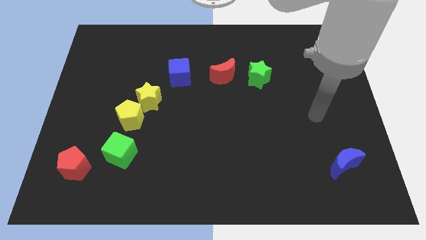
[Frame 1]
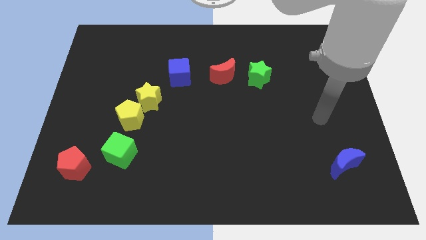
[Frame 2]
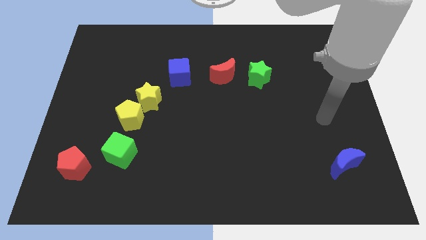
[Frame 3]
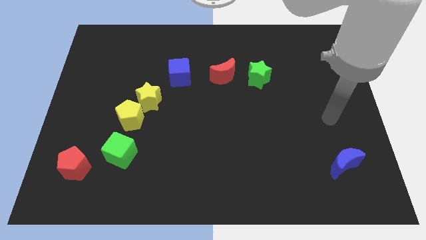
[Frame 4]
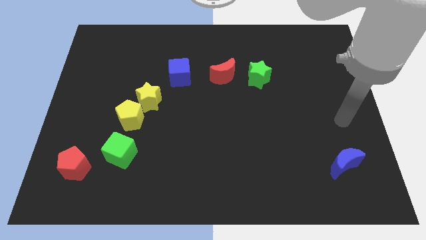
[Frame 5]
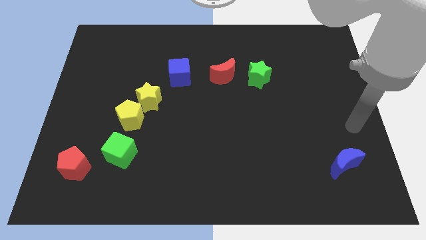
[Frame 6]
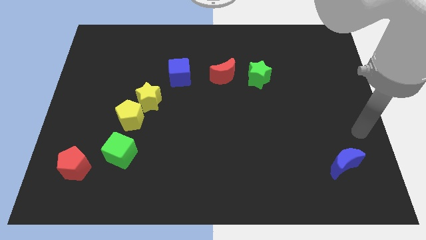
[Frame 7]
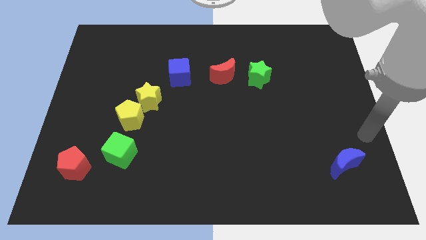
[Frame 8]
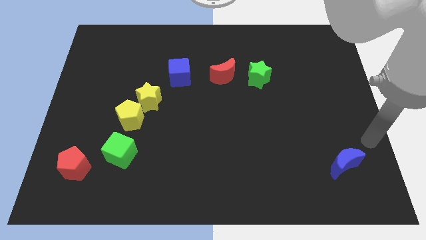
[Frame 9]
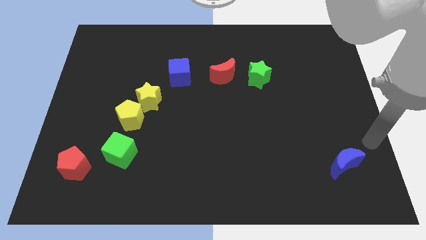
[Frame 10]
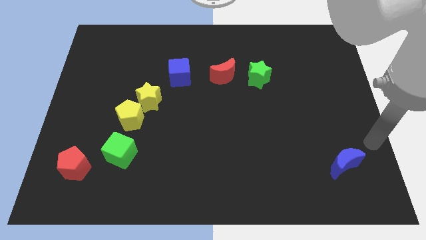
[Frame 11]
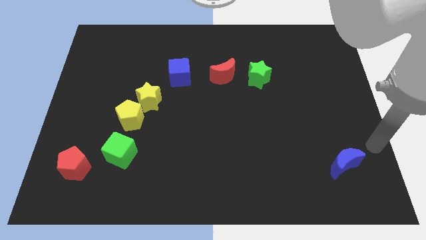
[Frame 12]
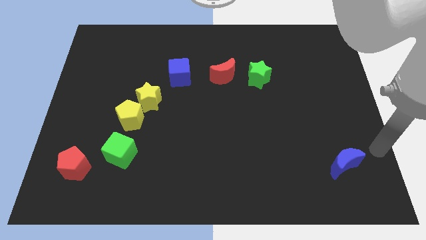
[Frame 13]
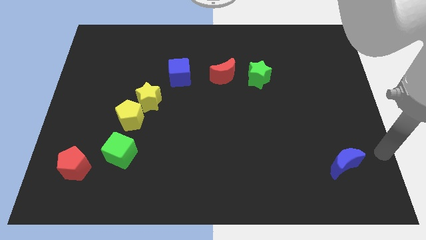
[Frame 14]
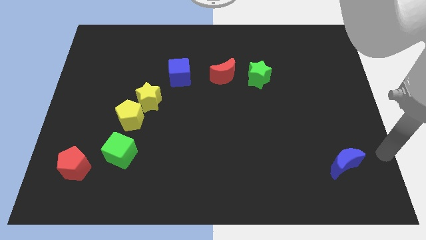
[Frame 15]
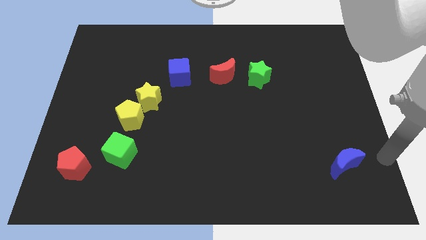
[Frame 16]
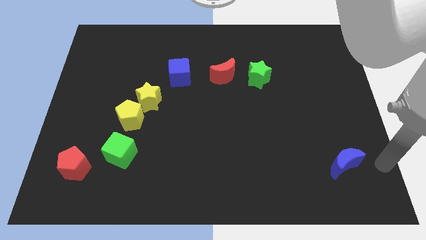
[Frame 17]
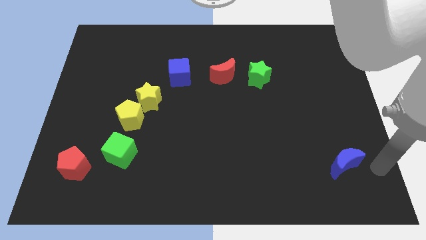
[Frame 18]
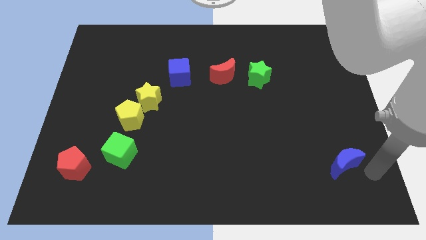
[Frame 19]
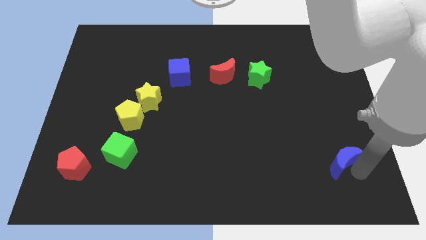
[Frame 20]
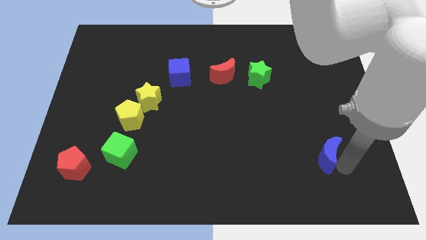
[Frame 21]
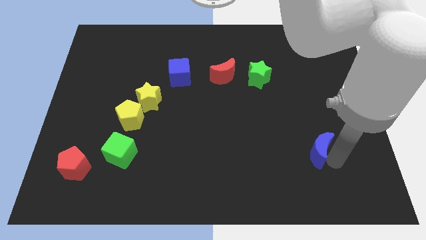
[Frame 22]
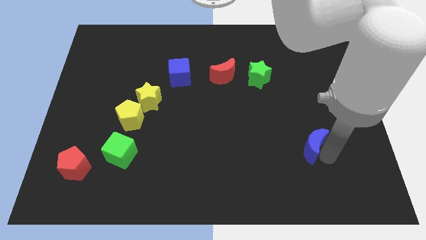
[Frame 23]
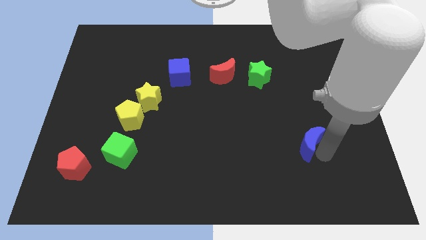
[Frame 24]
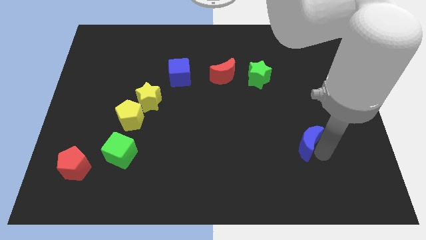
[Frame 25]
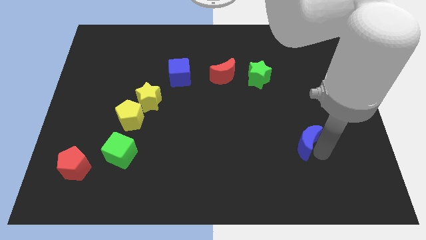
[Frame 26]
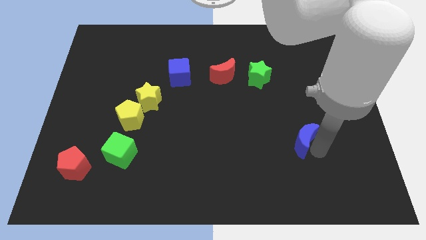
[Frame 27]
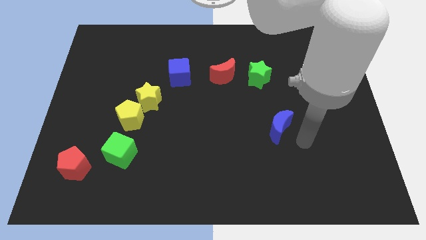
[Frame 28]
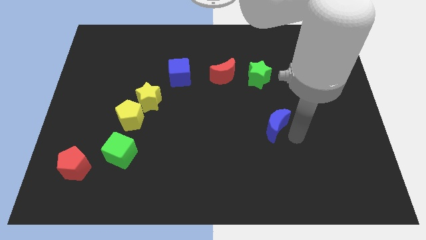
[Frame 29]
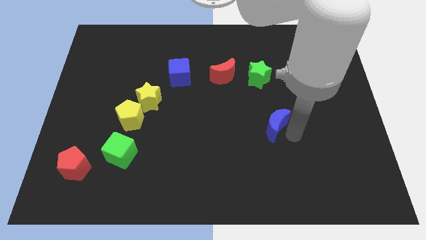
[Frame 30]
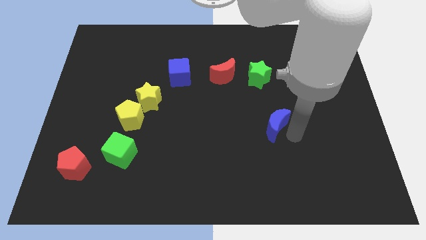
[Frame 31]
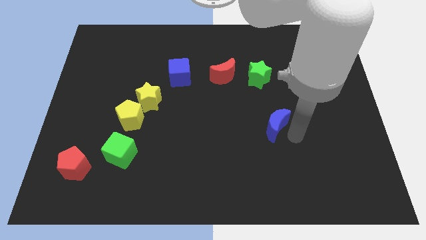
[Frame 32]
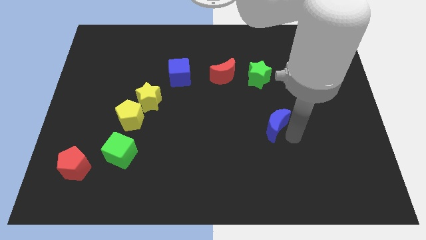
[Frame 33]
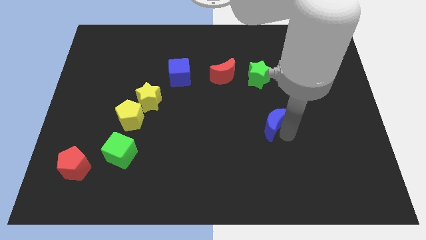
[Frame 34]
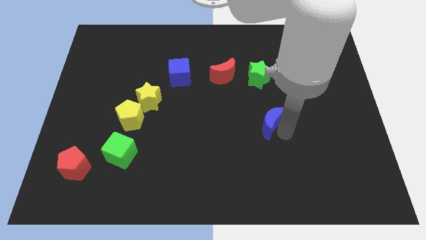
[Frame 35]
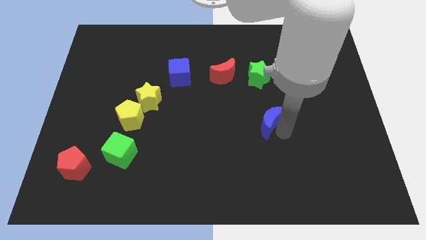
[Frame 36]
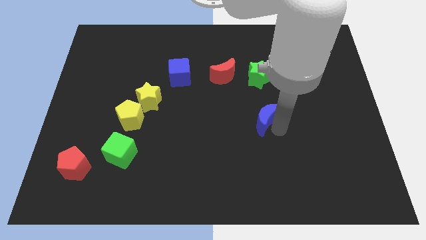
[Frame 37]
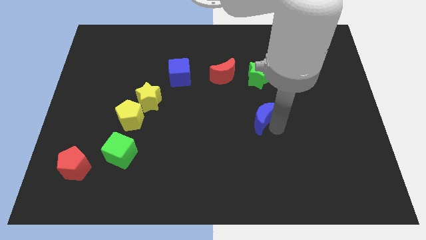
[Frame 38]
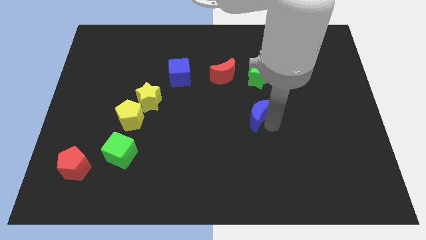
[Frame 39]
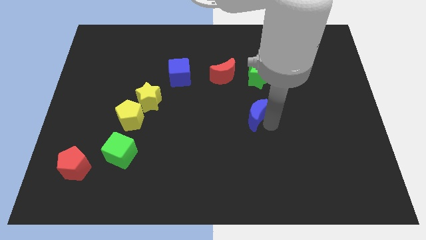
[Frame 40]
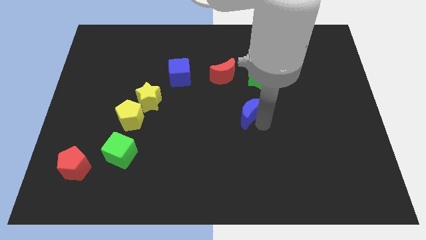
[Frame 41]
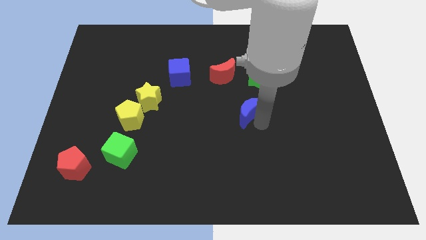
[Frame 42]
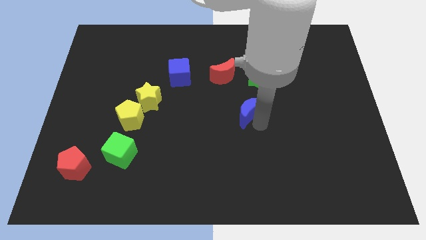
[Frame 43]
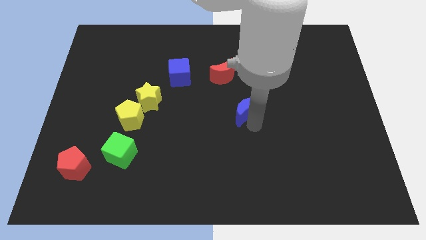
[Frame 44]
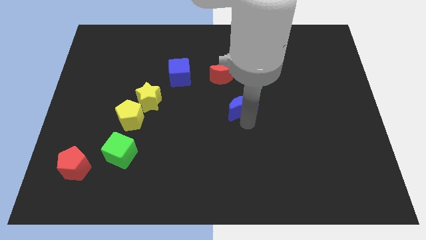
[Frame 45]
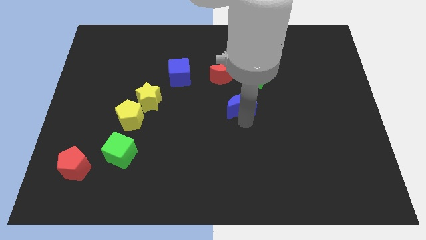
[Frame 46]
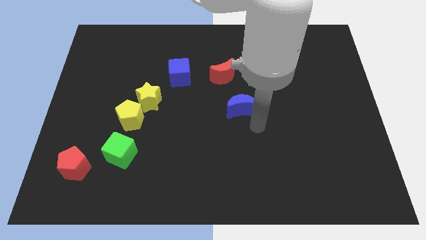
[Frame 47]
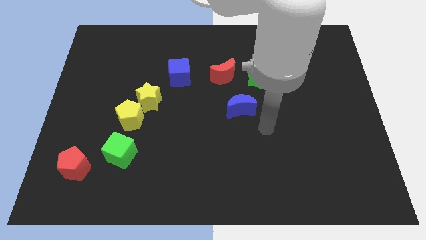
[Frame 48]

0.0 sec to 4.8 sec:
place the blue moon below the green star

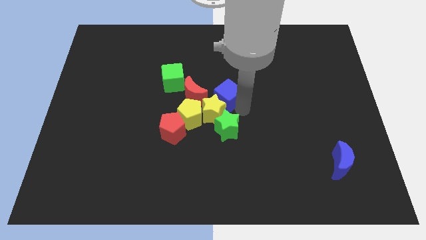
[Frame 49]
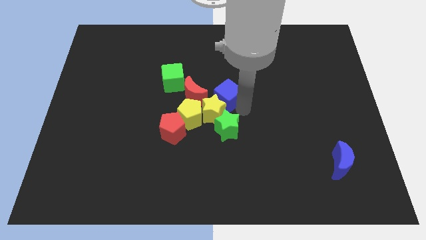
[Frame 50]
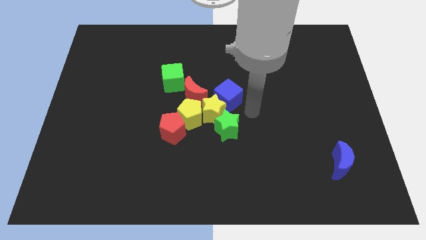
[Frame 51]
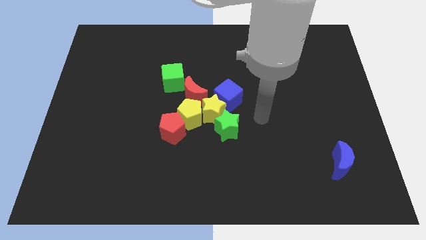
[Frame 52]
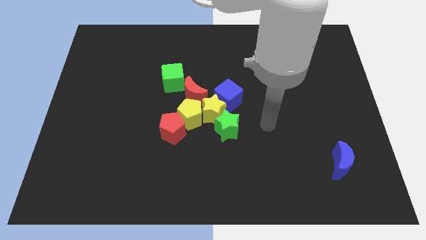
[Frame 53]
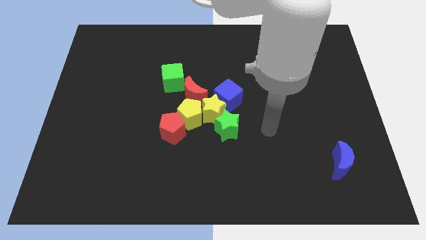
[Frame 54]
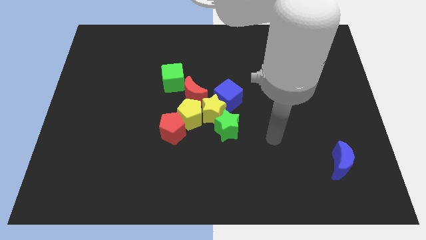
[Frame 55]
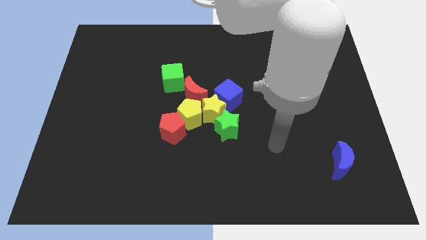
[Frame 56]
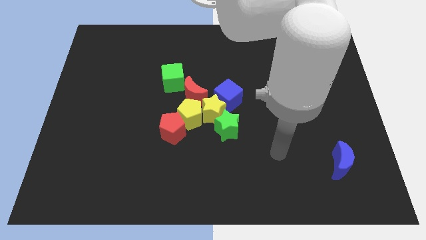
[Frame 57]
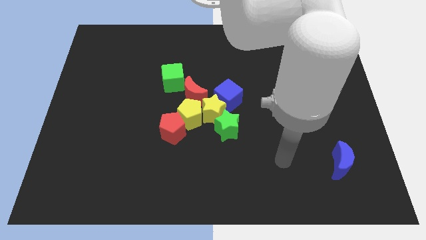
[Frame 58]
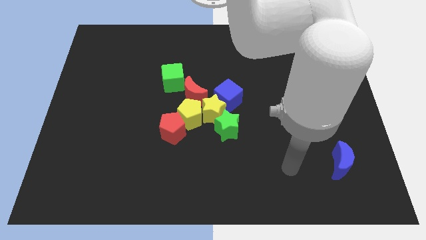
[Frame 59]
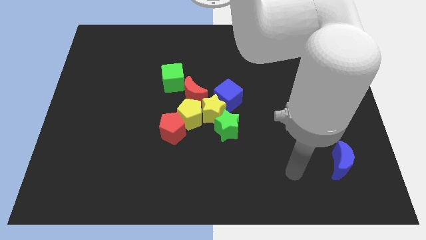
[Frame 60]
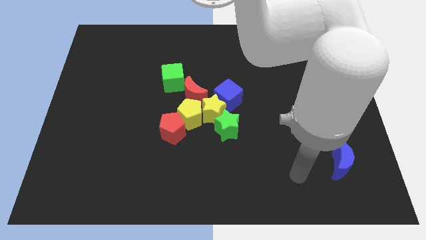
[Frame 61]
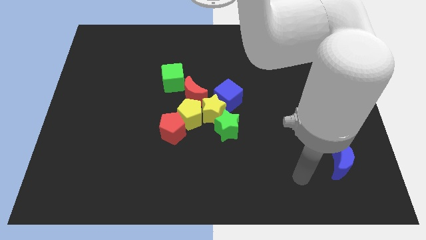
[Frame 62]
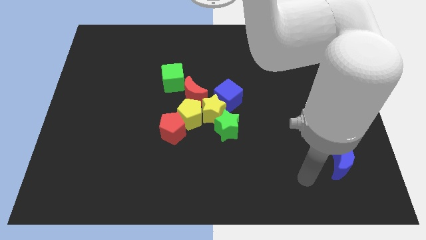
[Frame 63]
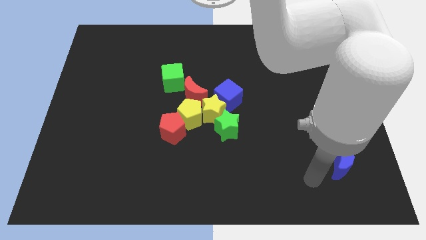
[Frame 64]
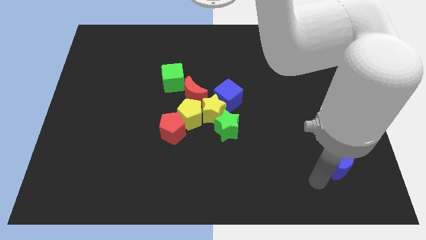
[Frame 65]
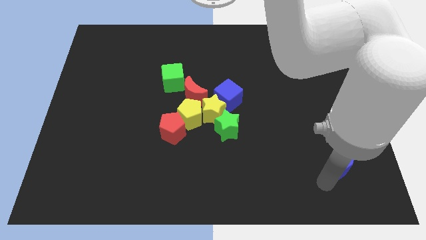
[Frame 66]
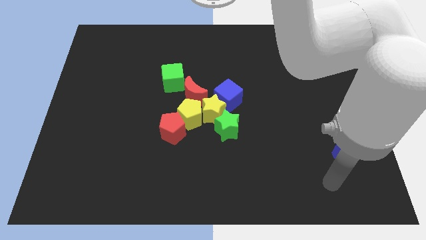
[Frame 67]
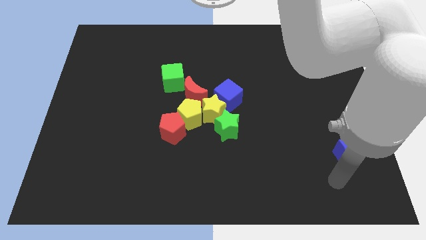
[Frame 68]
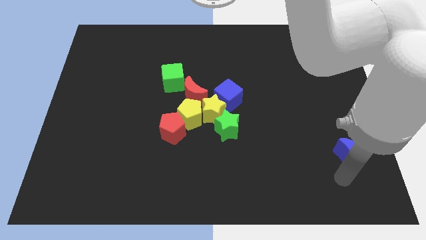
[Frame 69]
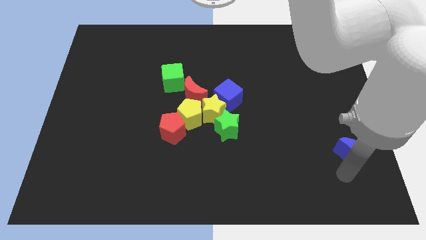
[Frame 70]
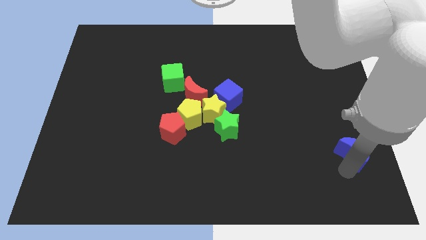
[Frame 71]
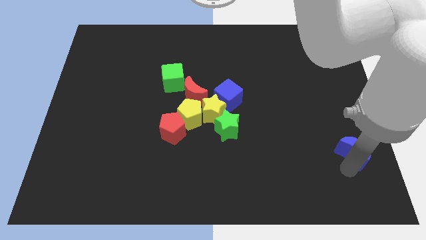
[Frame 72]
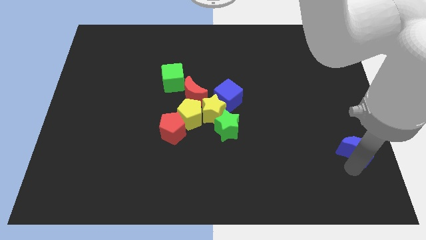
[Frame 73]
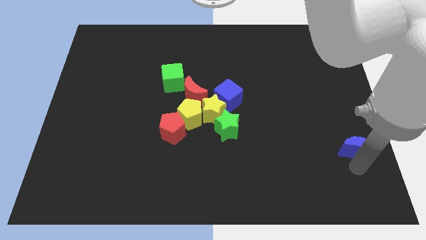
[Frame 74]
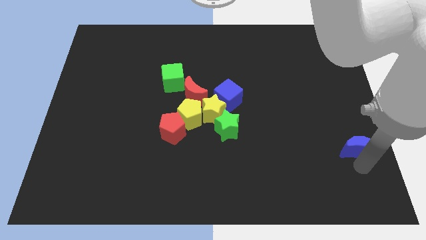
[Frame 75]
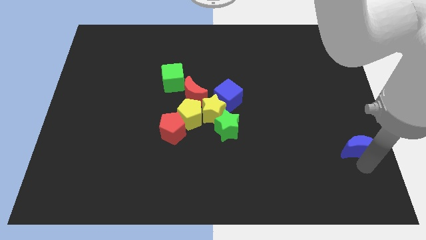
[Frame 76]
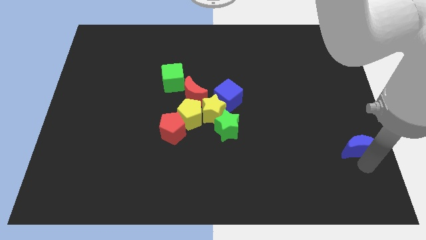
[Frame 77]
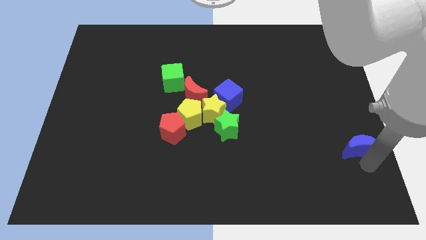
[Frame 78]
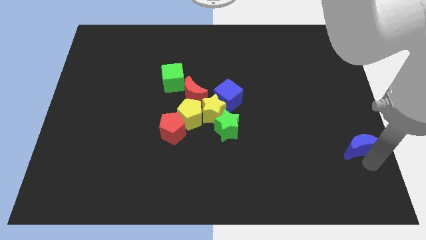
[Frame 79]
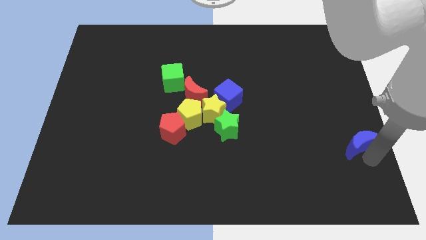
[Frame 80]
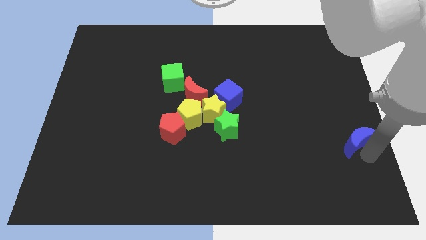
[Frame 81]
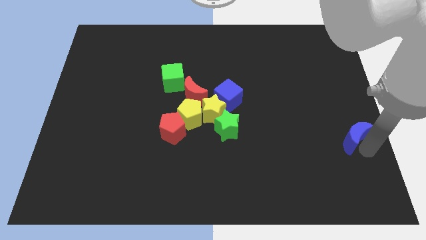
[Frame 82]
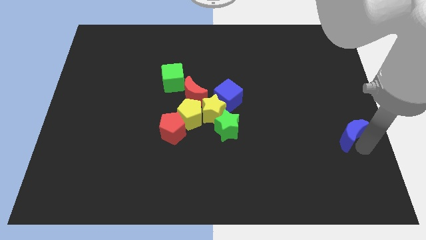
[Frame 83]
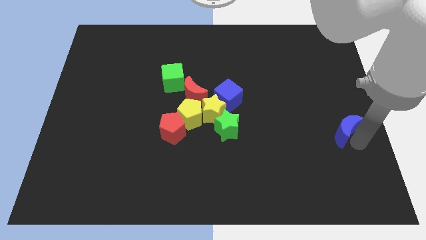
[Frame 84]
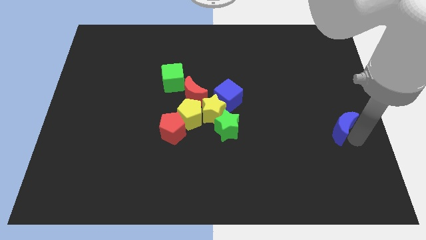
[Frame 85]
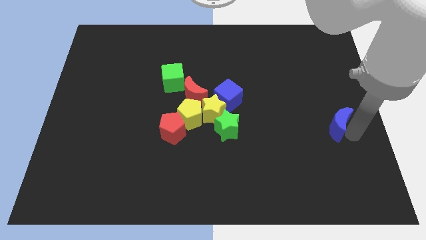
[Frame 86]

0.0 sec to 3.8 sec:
move the blue crescent parallel to the green star

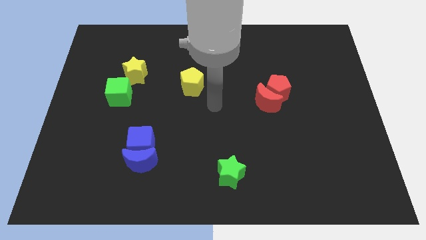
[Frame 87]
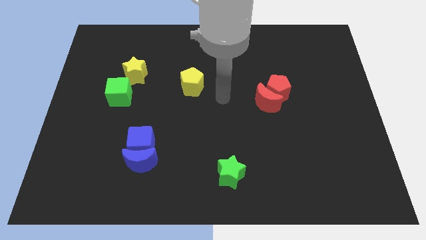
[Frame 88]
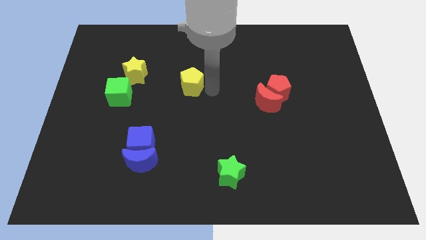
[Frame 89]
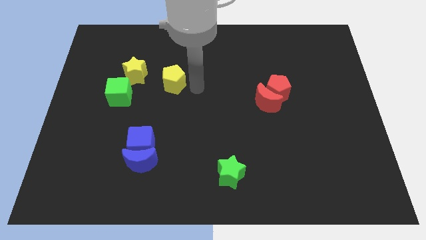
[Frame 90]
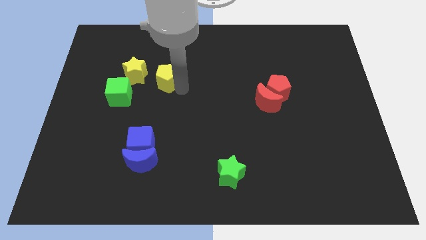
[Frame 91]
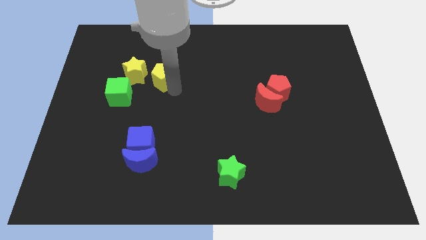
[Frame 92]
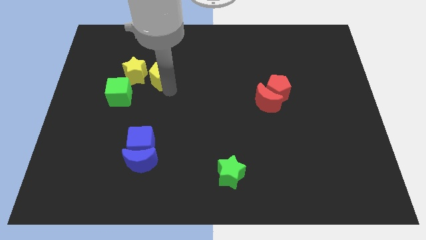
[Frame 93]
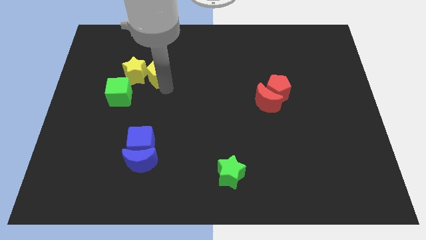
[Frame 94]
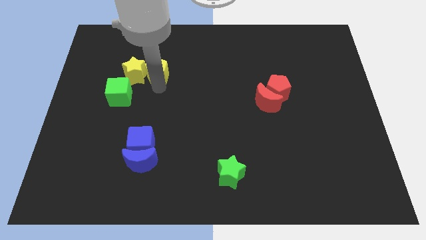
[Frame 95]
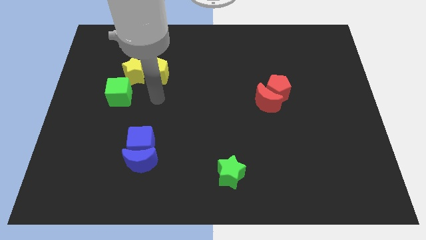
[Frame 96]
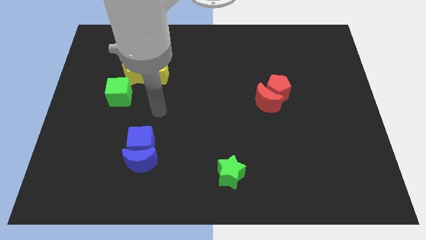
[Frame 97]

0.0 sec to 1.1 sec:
push the yellow pentagon to the right of the yellow star
